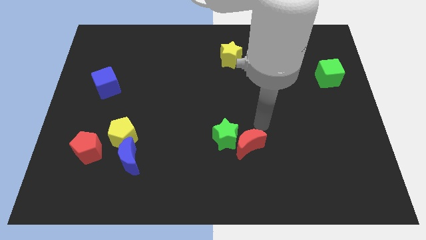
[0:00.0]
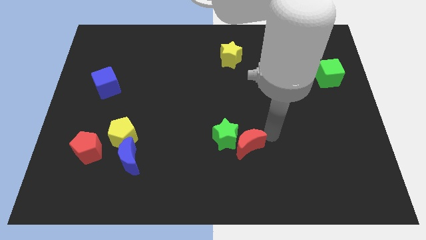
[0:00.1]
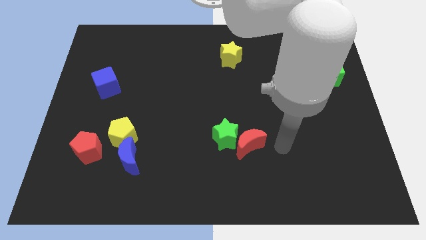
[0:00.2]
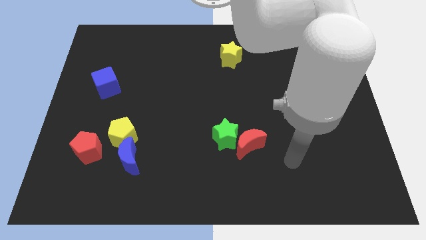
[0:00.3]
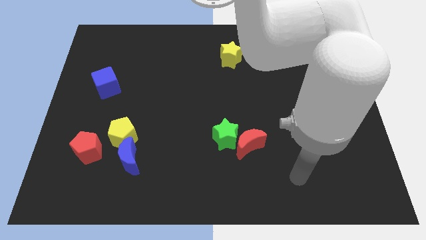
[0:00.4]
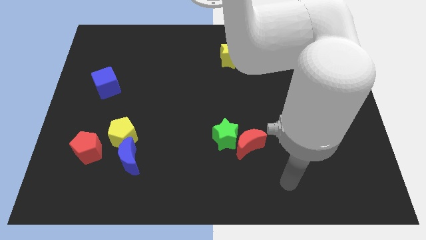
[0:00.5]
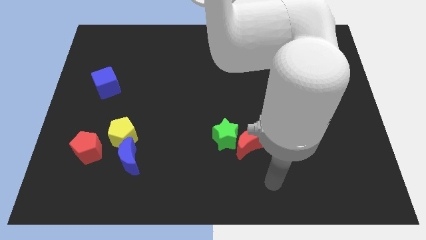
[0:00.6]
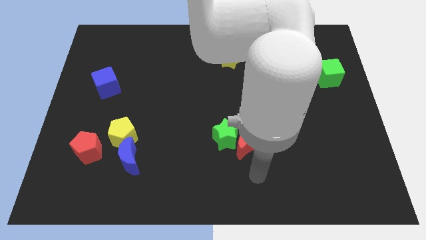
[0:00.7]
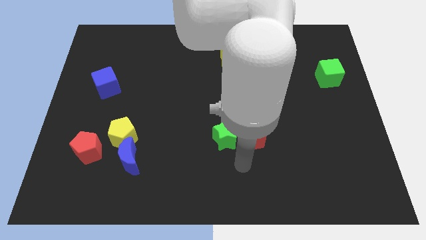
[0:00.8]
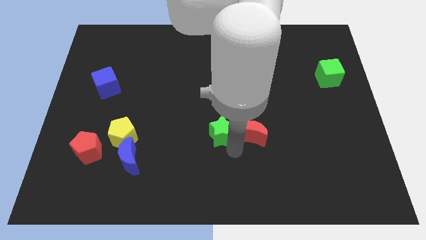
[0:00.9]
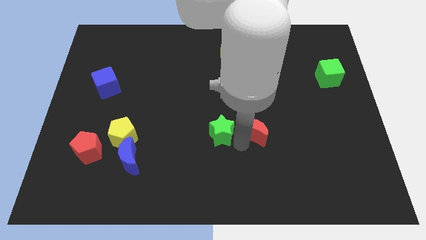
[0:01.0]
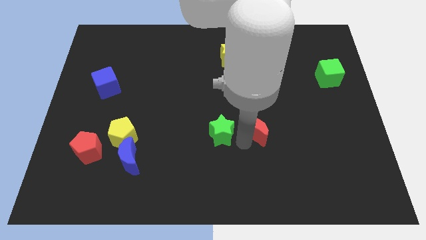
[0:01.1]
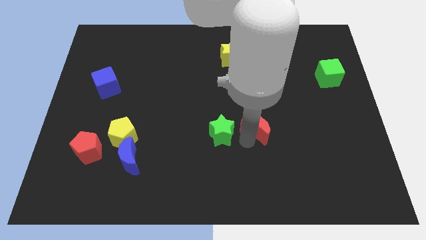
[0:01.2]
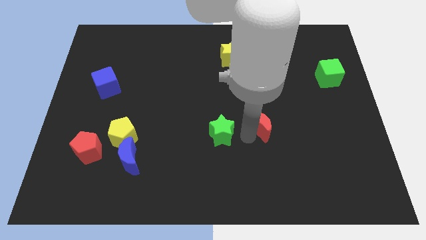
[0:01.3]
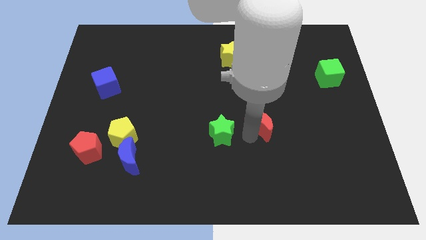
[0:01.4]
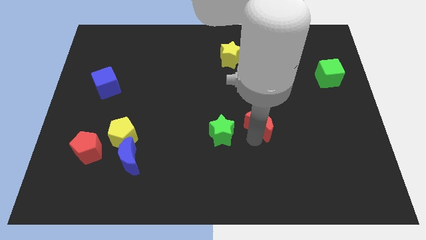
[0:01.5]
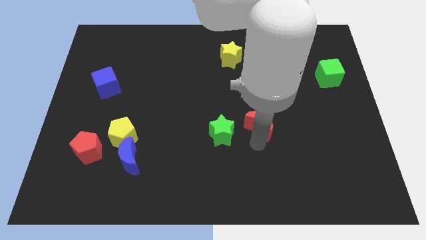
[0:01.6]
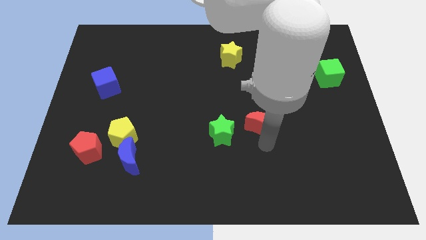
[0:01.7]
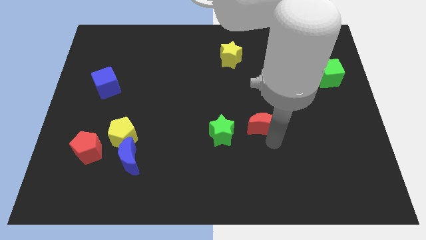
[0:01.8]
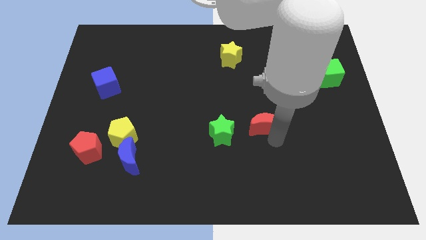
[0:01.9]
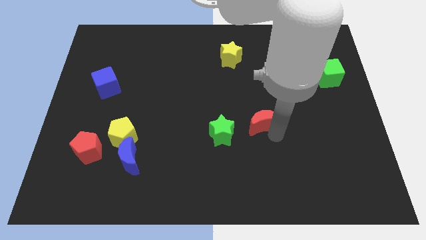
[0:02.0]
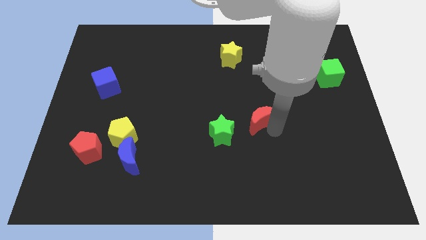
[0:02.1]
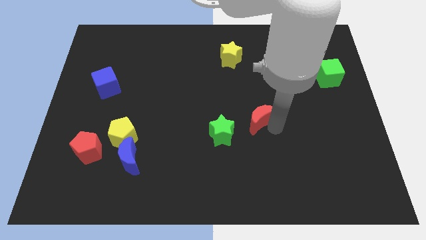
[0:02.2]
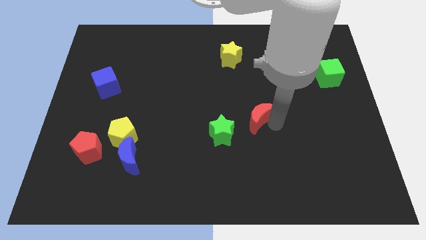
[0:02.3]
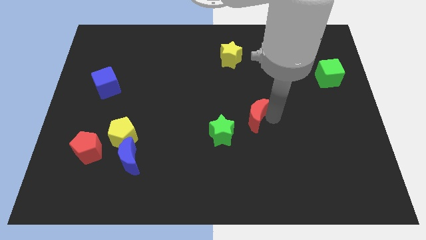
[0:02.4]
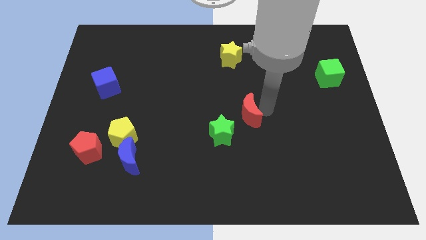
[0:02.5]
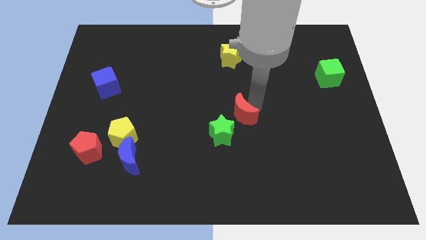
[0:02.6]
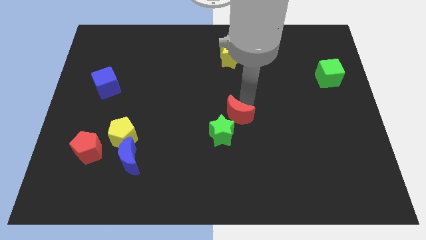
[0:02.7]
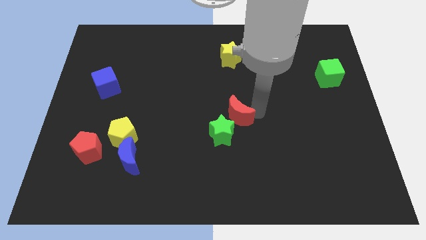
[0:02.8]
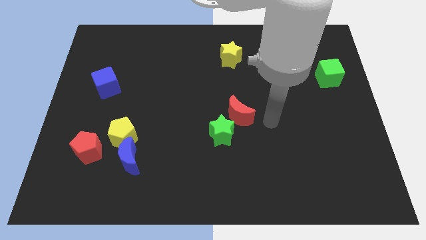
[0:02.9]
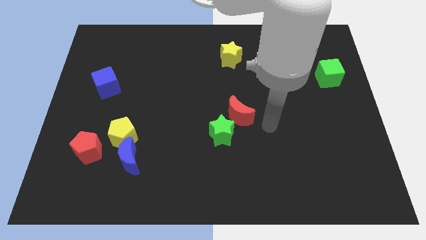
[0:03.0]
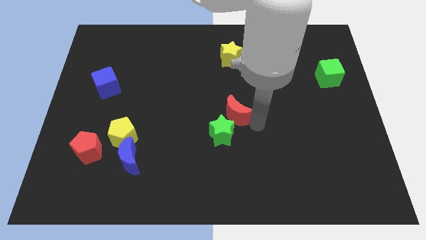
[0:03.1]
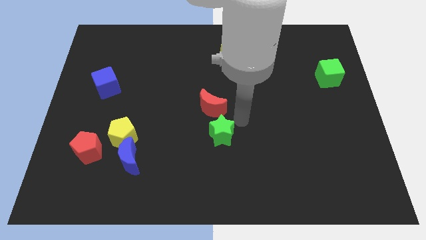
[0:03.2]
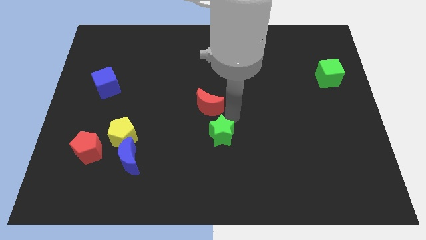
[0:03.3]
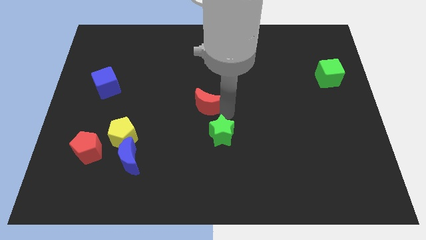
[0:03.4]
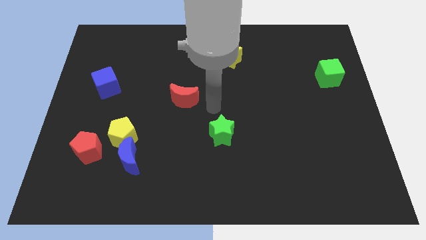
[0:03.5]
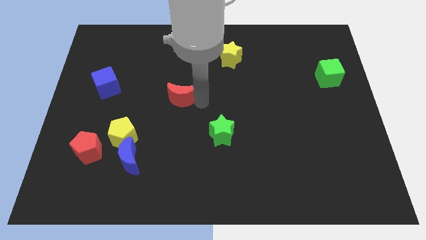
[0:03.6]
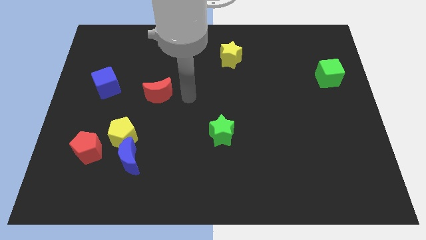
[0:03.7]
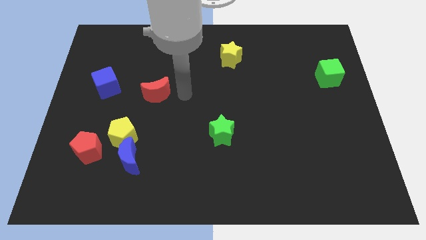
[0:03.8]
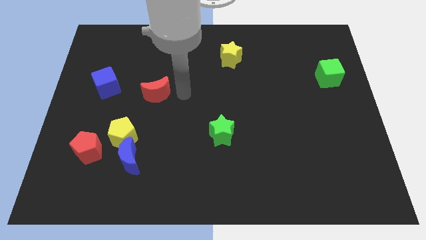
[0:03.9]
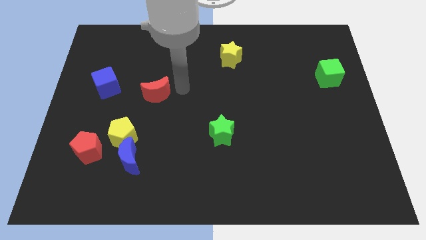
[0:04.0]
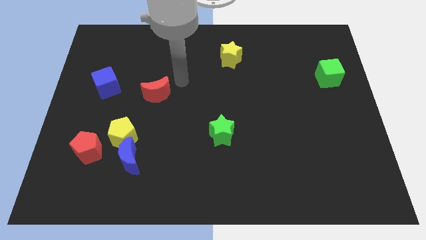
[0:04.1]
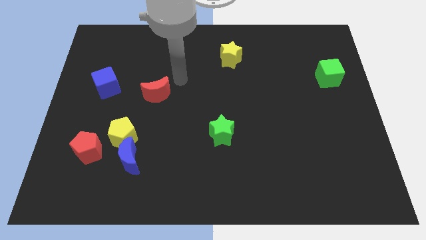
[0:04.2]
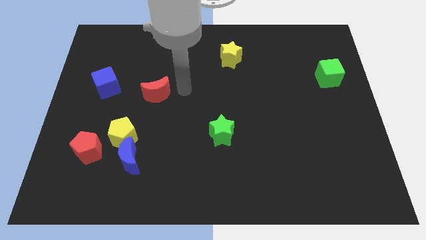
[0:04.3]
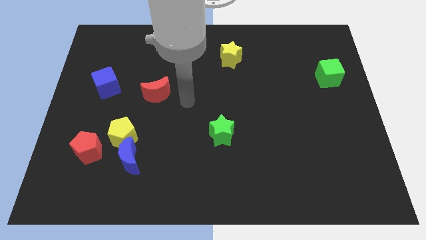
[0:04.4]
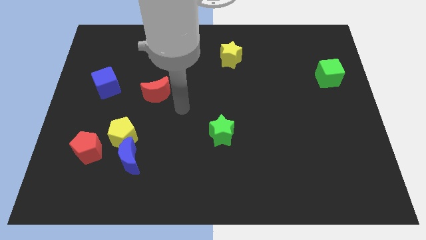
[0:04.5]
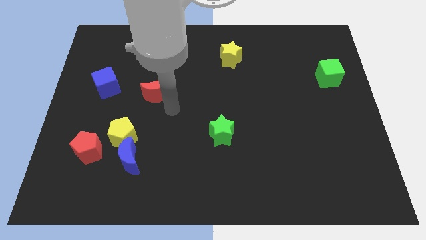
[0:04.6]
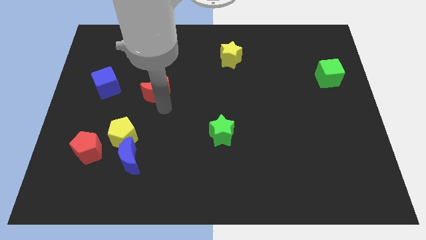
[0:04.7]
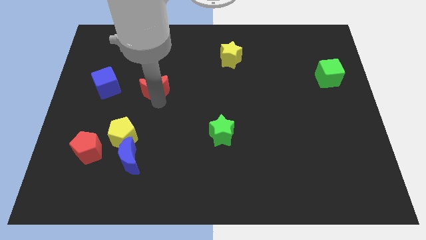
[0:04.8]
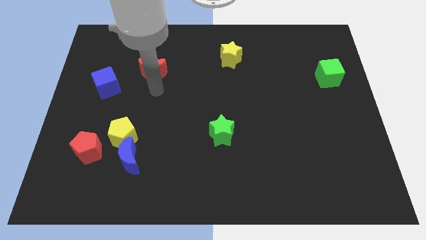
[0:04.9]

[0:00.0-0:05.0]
push the red moon to the right side of the blue cube

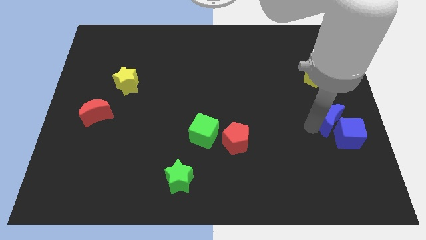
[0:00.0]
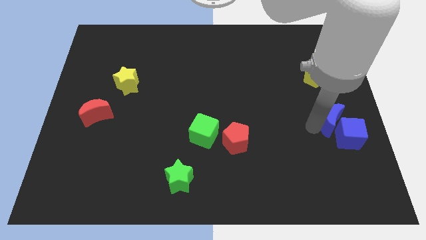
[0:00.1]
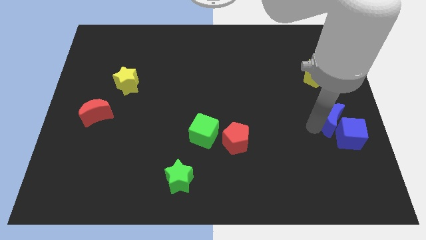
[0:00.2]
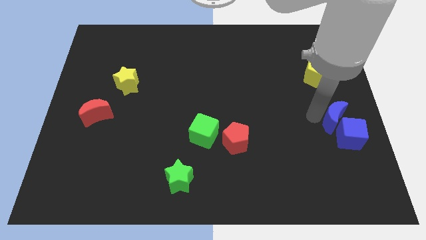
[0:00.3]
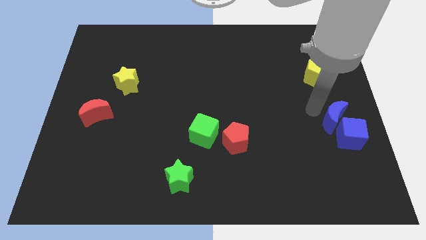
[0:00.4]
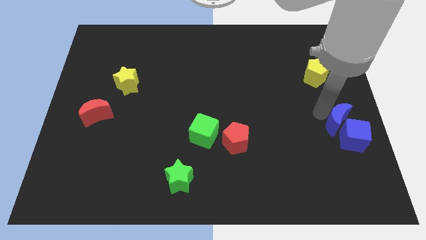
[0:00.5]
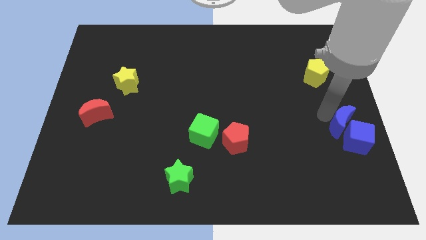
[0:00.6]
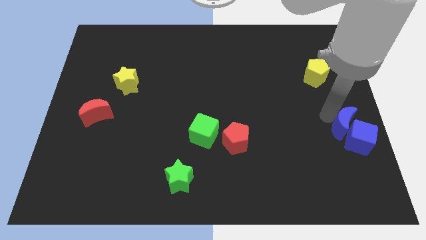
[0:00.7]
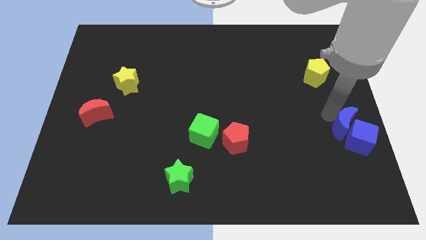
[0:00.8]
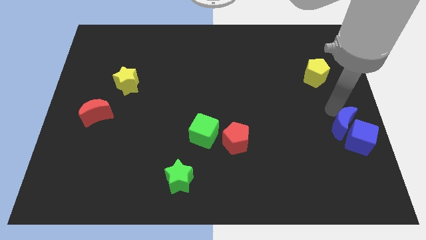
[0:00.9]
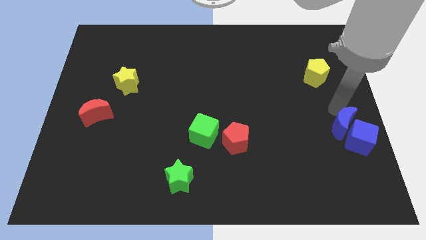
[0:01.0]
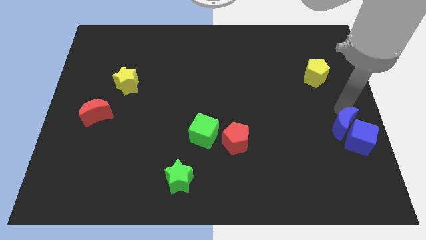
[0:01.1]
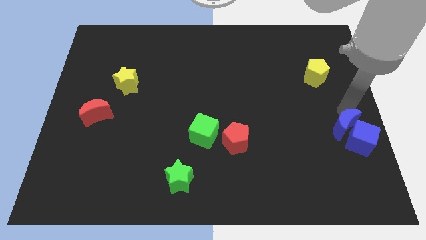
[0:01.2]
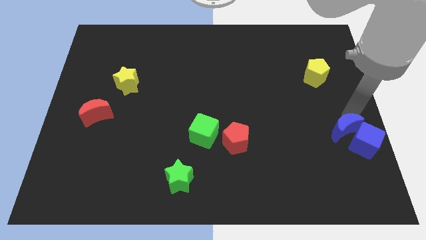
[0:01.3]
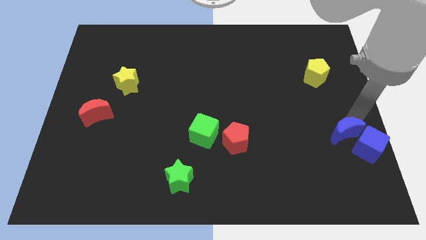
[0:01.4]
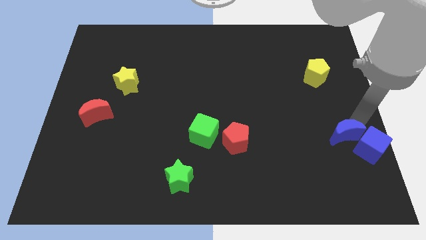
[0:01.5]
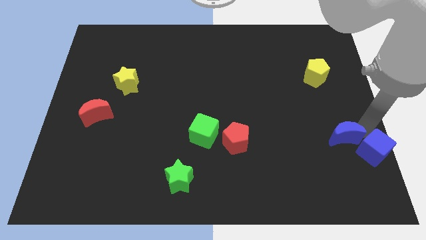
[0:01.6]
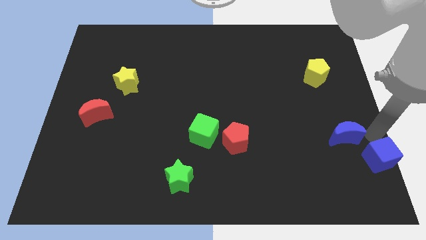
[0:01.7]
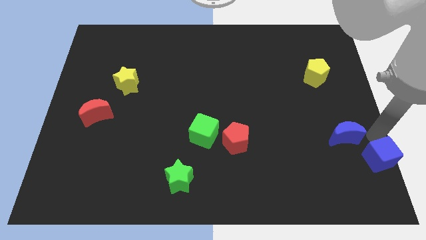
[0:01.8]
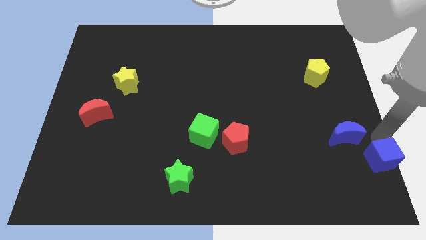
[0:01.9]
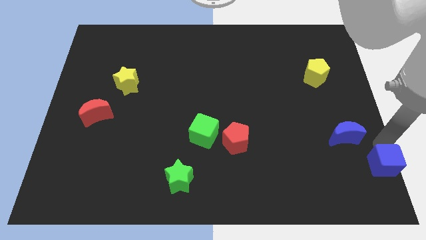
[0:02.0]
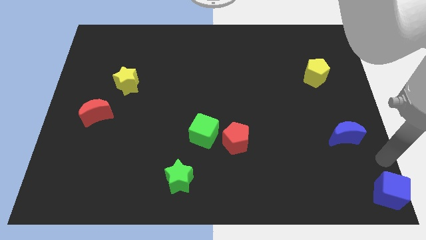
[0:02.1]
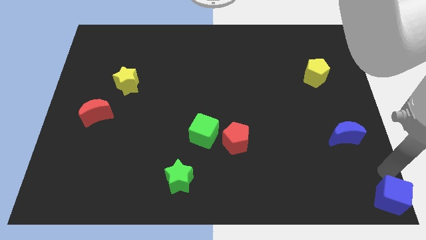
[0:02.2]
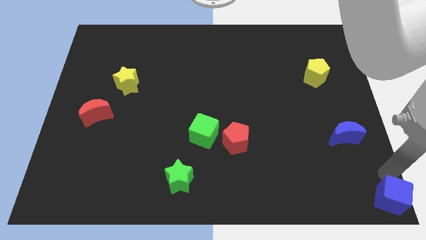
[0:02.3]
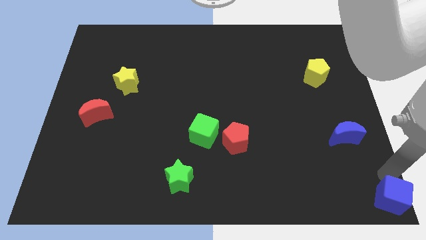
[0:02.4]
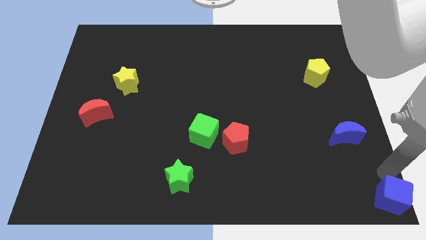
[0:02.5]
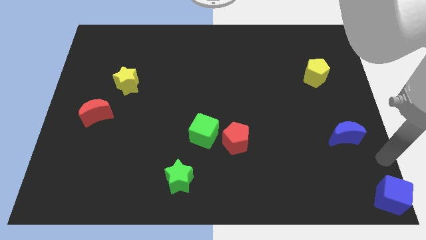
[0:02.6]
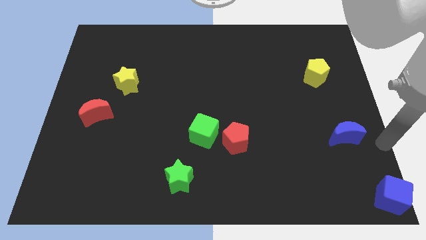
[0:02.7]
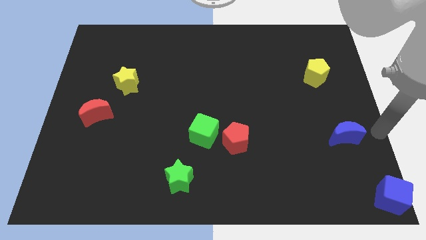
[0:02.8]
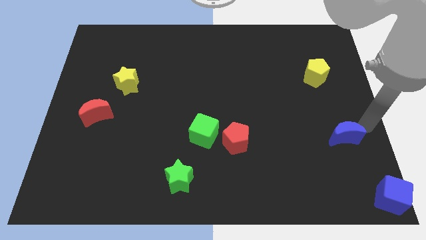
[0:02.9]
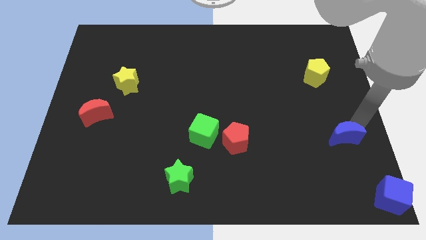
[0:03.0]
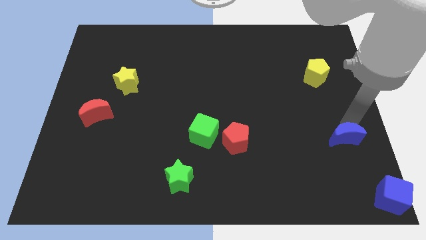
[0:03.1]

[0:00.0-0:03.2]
place blue cube towards bottom right corner

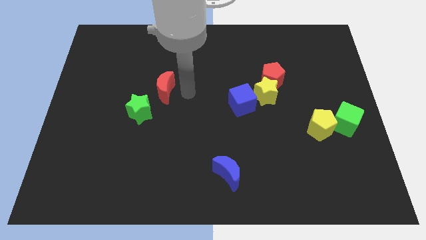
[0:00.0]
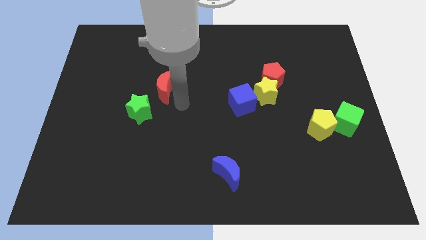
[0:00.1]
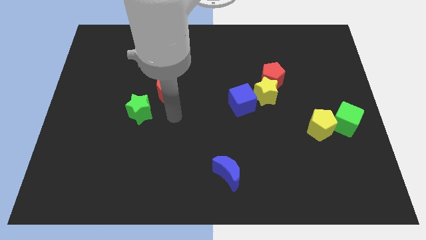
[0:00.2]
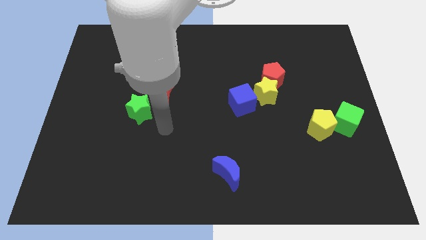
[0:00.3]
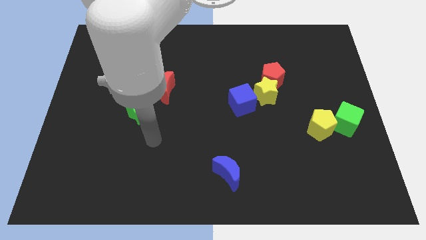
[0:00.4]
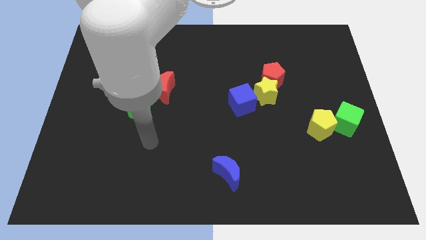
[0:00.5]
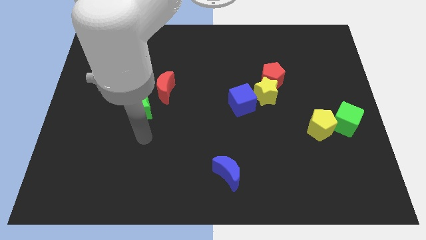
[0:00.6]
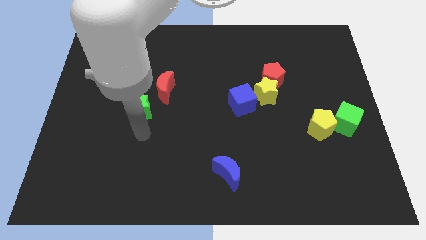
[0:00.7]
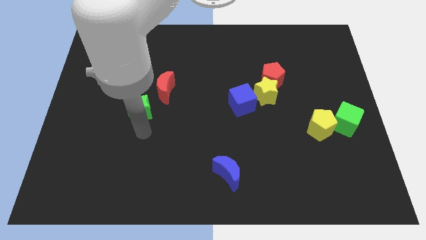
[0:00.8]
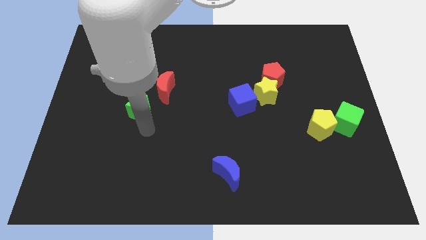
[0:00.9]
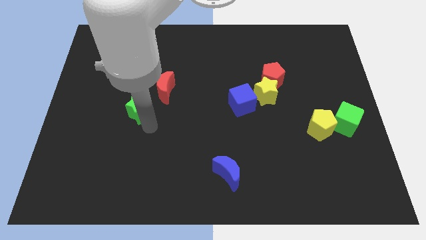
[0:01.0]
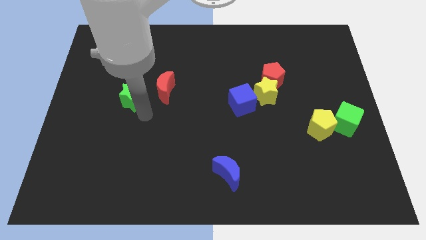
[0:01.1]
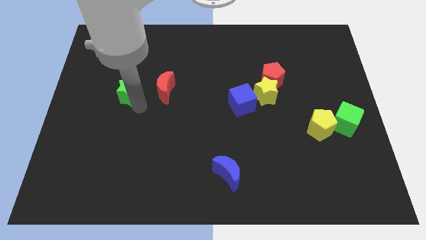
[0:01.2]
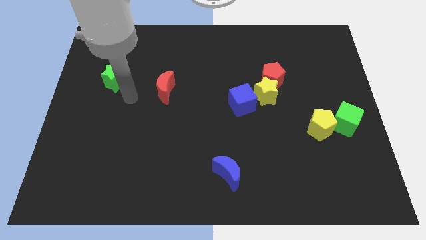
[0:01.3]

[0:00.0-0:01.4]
place the green star to the left of the red crescent
